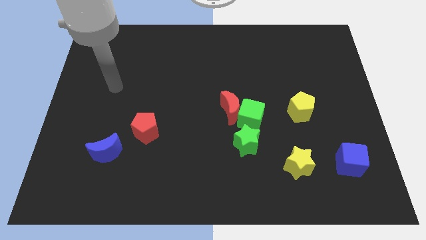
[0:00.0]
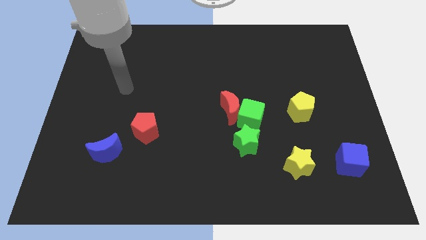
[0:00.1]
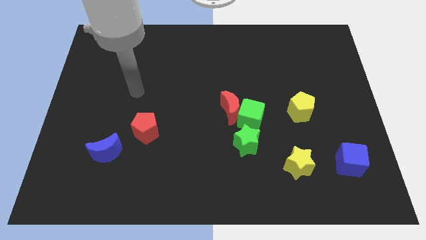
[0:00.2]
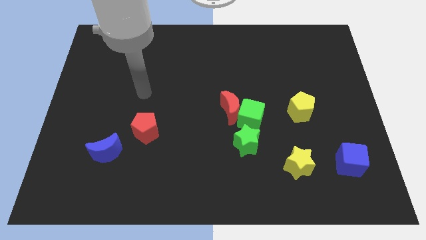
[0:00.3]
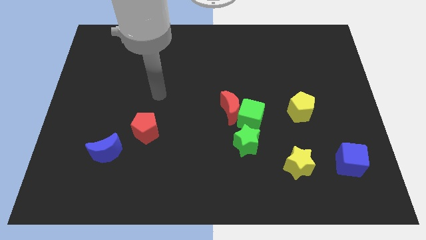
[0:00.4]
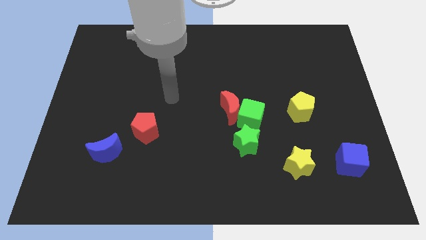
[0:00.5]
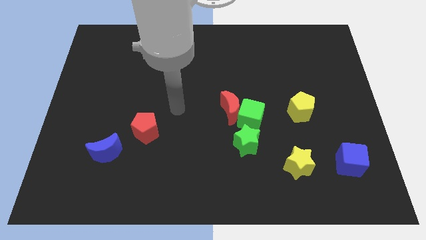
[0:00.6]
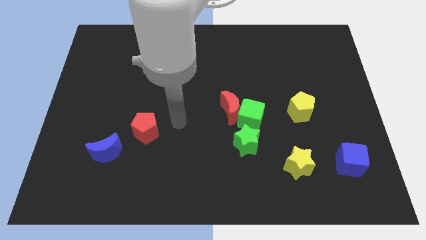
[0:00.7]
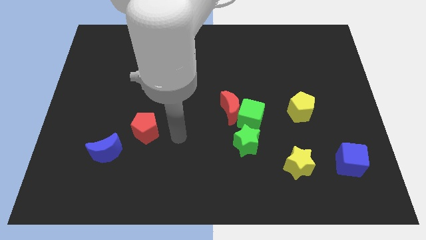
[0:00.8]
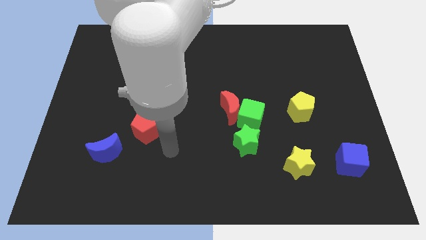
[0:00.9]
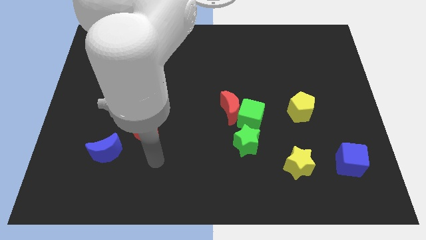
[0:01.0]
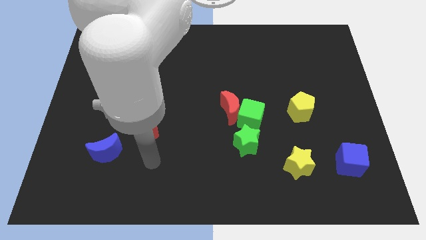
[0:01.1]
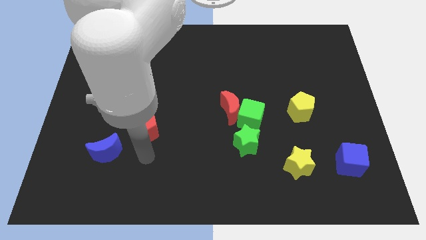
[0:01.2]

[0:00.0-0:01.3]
point your arm at the bottom of red pentagon

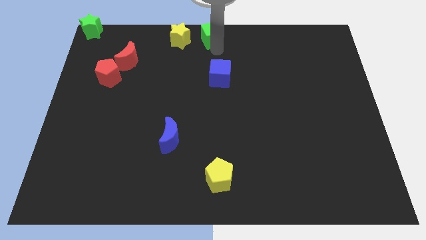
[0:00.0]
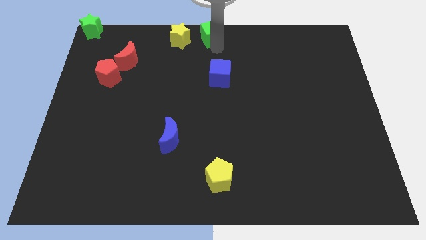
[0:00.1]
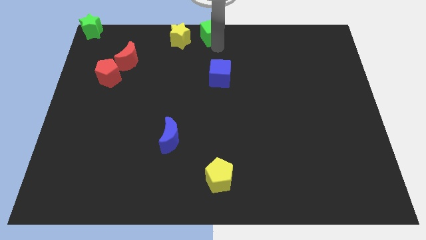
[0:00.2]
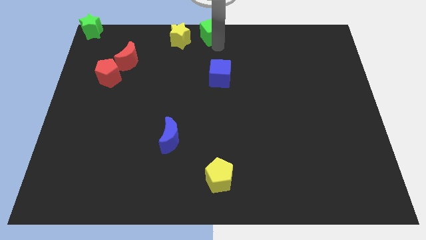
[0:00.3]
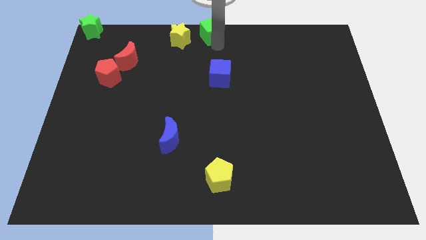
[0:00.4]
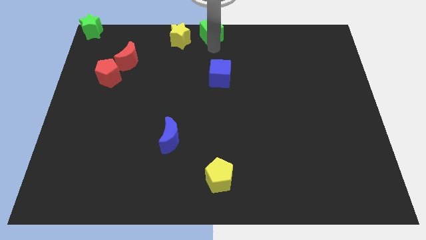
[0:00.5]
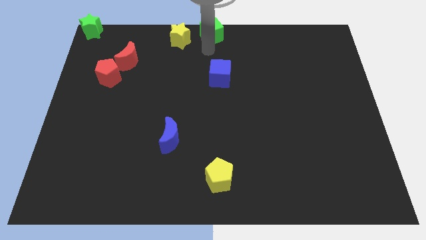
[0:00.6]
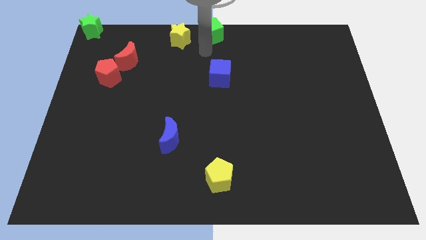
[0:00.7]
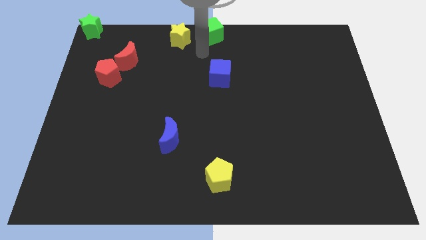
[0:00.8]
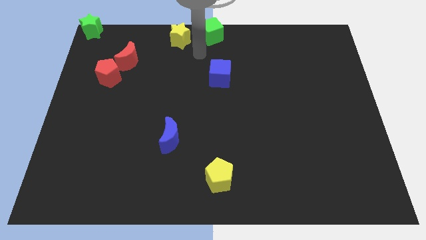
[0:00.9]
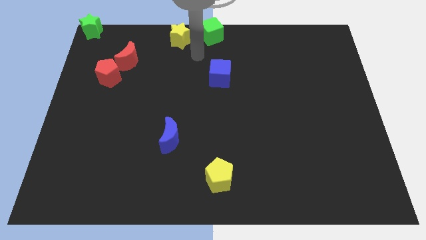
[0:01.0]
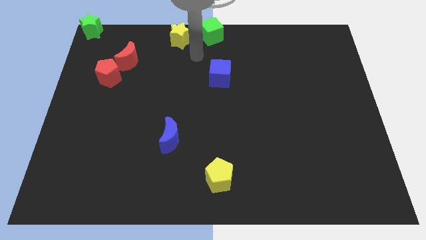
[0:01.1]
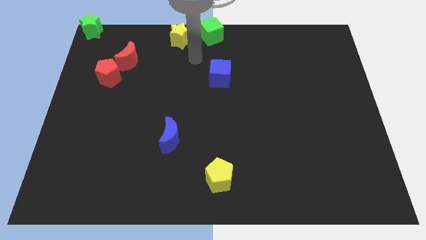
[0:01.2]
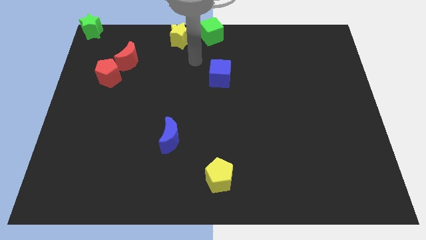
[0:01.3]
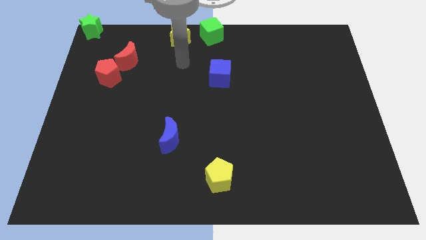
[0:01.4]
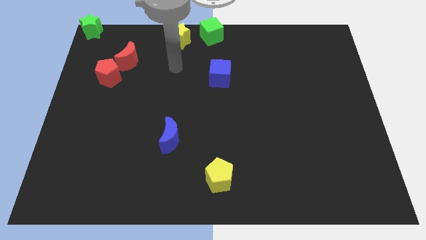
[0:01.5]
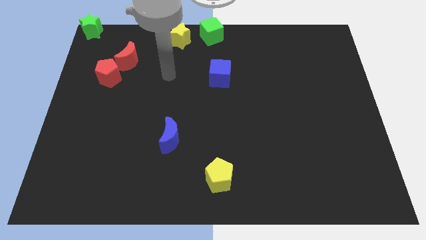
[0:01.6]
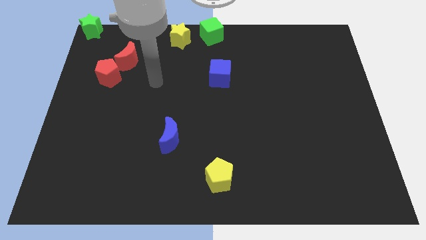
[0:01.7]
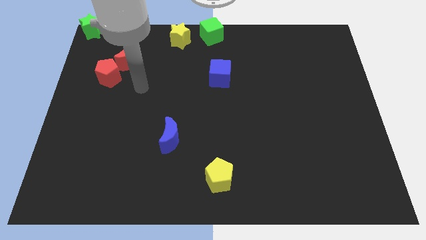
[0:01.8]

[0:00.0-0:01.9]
move your arm away from green cube

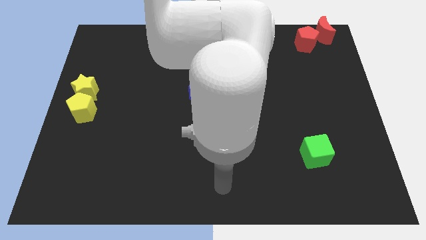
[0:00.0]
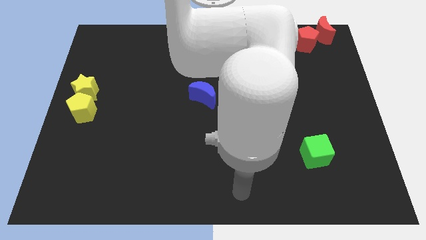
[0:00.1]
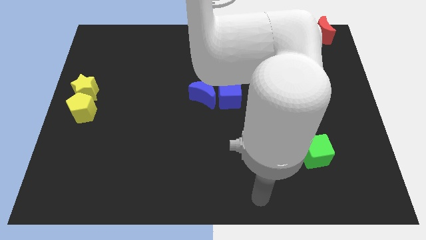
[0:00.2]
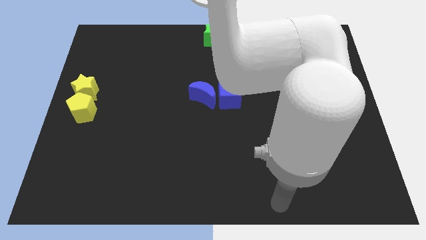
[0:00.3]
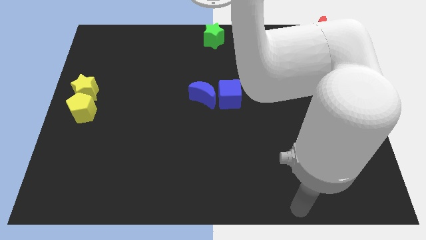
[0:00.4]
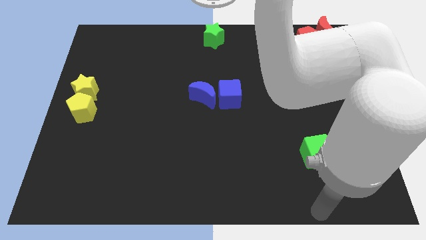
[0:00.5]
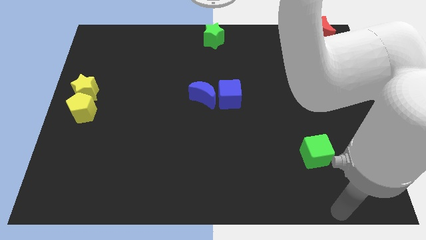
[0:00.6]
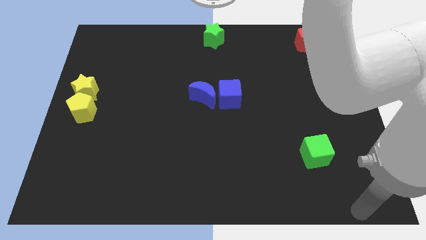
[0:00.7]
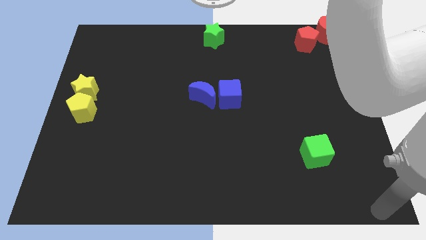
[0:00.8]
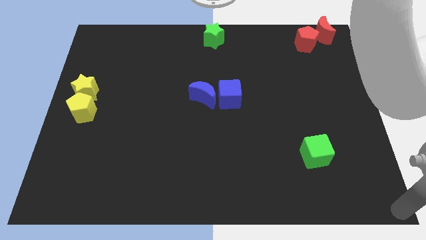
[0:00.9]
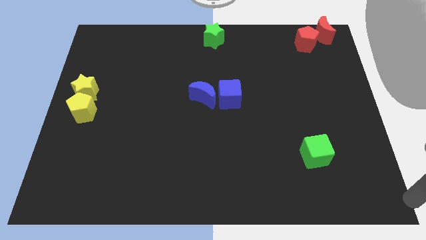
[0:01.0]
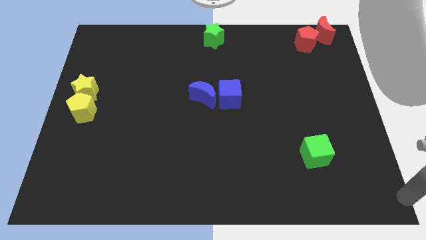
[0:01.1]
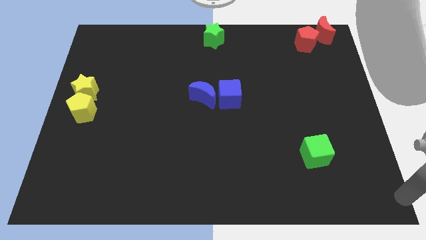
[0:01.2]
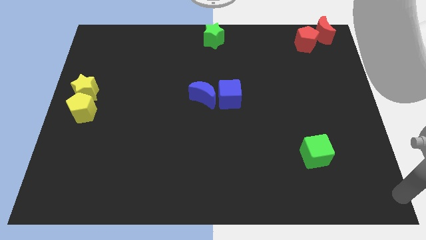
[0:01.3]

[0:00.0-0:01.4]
move your hand towards the bottom right of the board

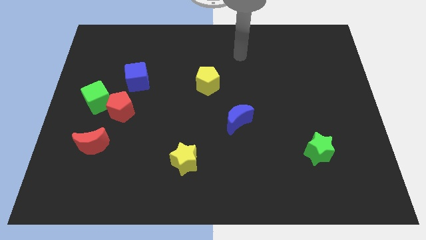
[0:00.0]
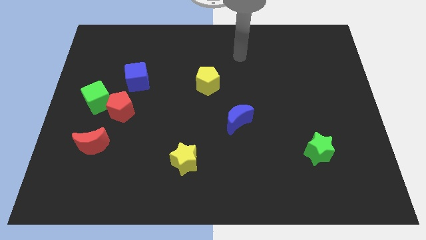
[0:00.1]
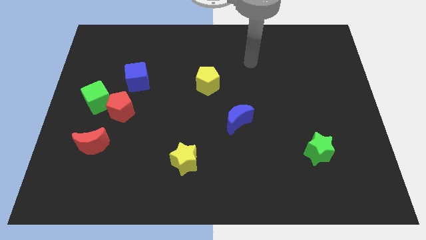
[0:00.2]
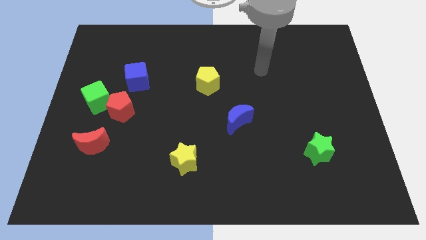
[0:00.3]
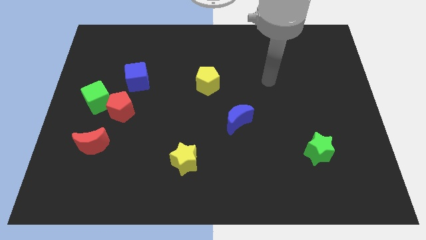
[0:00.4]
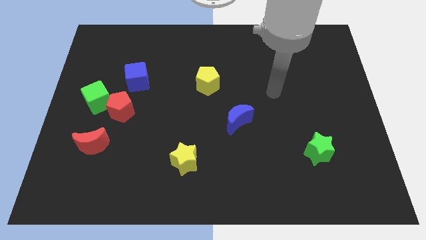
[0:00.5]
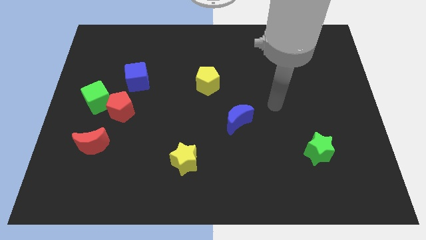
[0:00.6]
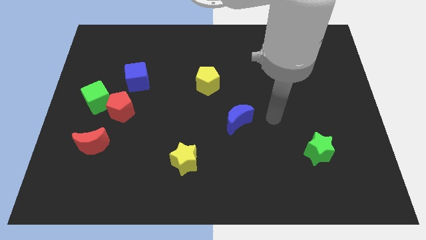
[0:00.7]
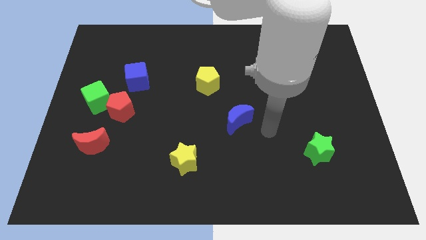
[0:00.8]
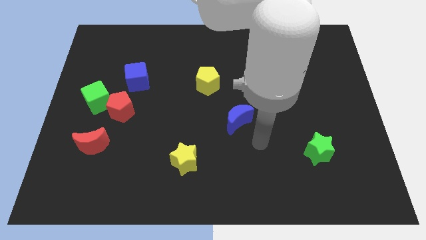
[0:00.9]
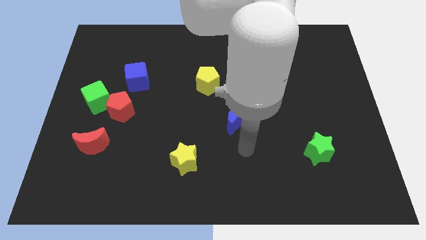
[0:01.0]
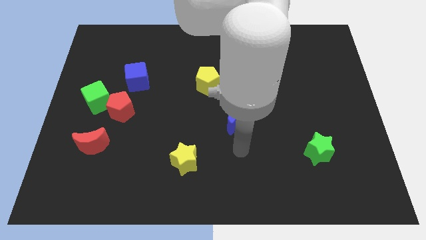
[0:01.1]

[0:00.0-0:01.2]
move your hand towards the blue crescent

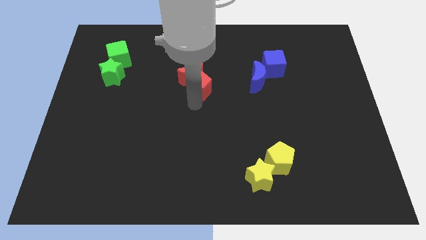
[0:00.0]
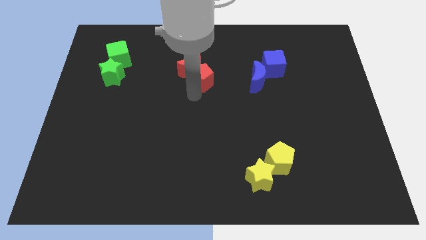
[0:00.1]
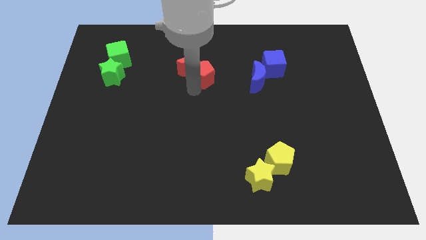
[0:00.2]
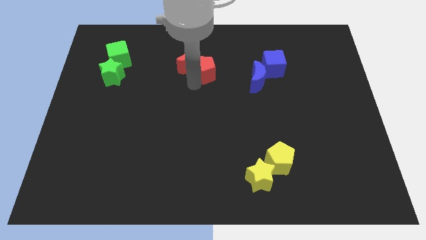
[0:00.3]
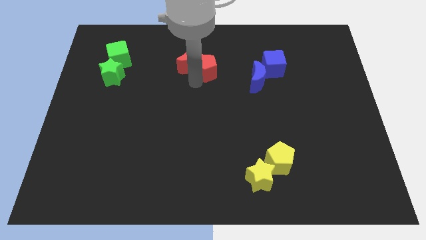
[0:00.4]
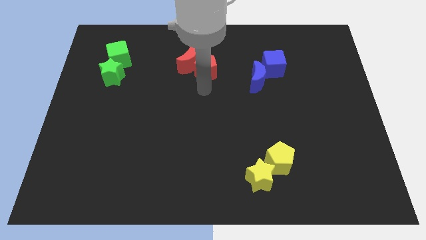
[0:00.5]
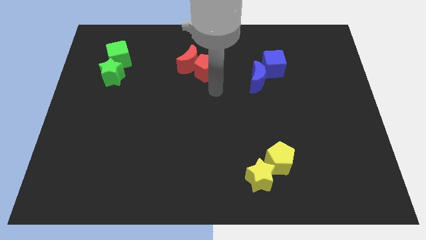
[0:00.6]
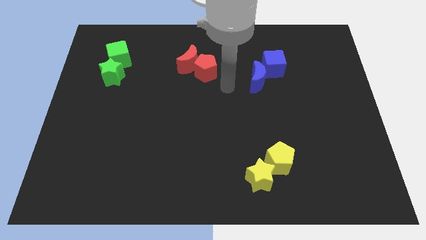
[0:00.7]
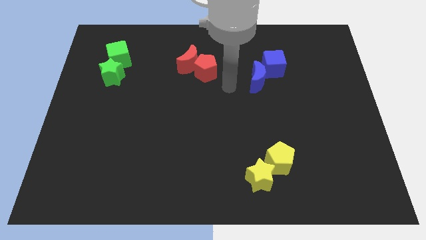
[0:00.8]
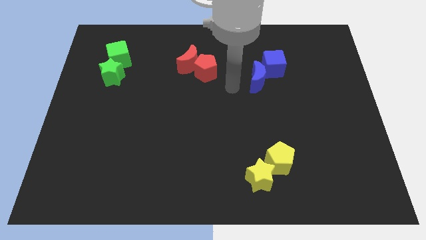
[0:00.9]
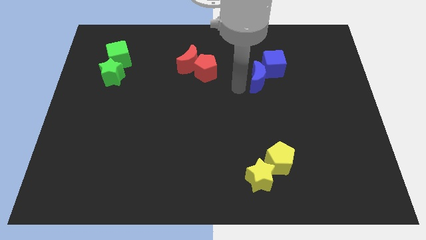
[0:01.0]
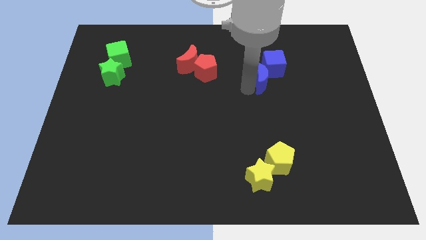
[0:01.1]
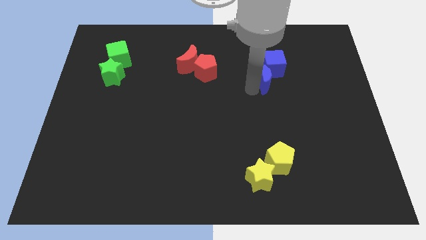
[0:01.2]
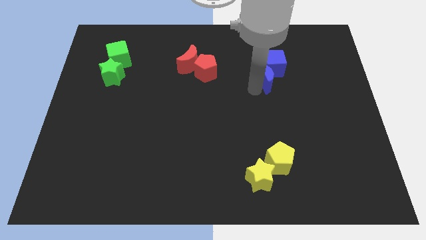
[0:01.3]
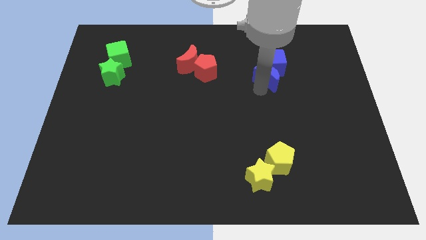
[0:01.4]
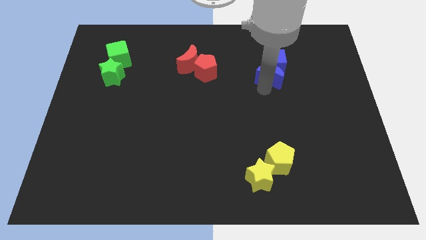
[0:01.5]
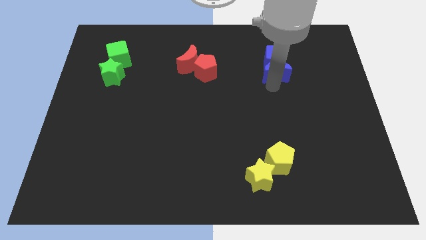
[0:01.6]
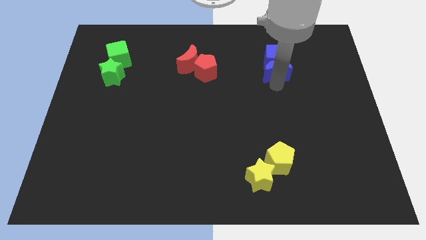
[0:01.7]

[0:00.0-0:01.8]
place the red crescent and red pentagon horizontally left to the blue crescent and blue cube

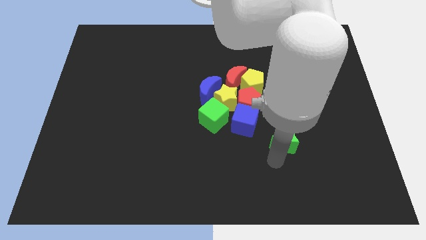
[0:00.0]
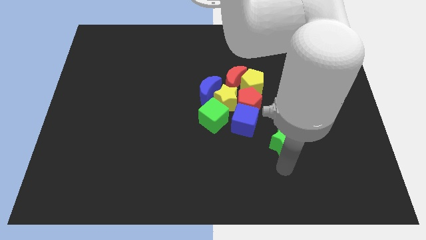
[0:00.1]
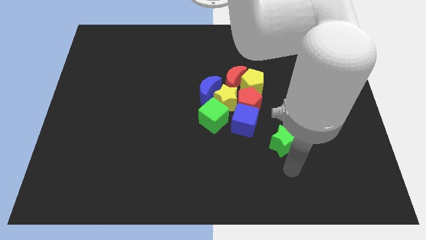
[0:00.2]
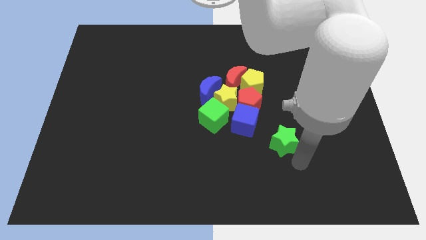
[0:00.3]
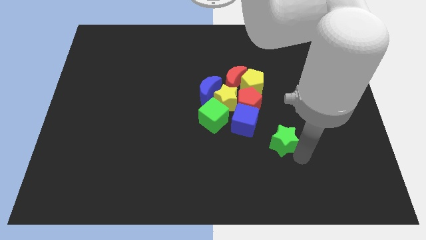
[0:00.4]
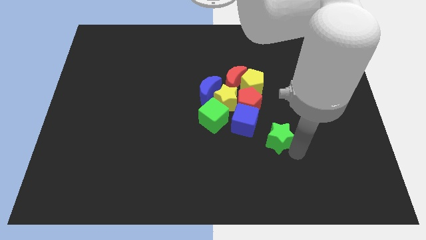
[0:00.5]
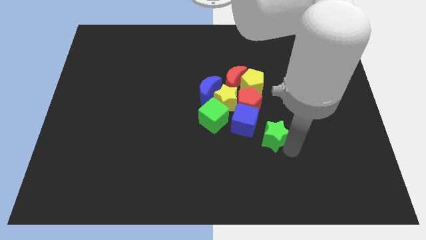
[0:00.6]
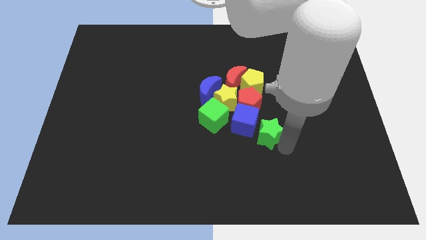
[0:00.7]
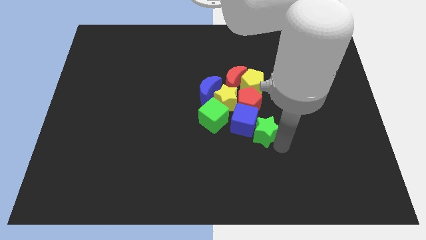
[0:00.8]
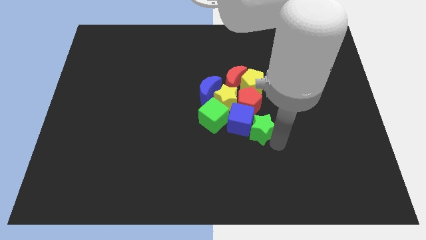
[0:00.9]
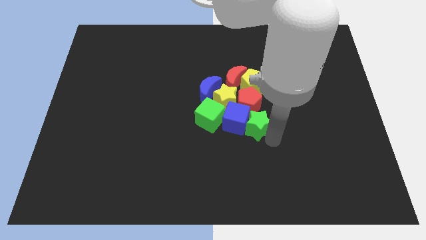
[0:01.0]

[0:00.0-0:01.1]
place the green star to the right of the blue cube

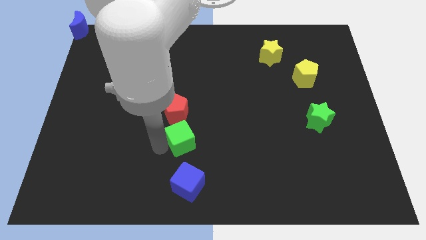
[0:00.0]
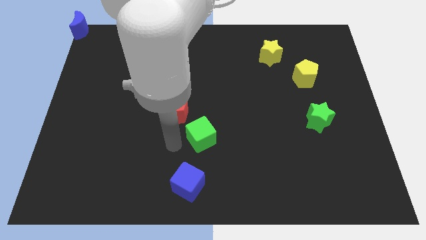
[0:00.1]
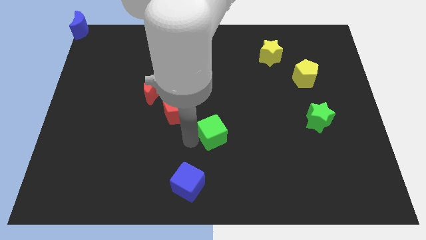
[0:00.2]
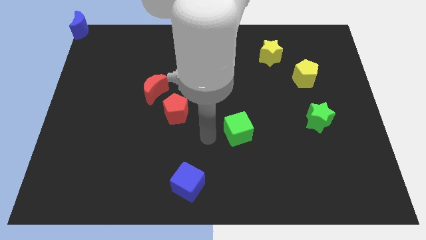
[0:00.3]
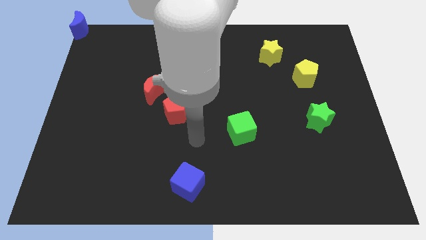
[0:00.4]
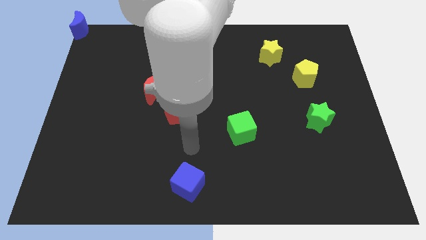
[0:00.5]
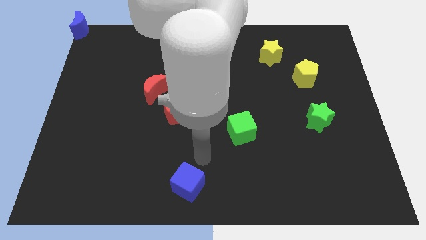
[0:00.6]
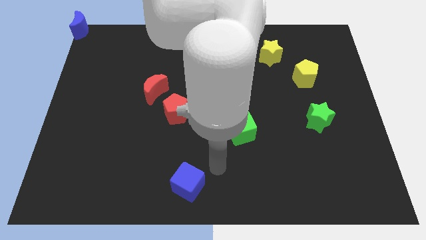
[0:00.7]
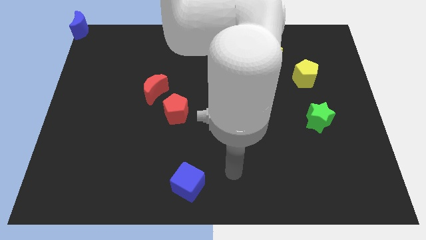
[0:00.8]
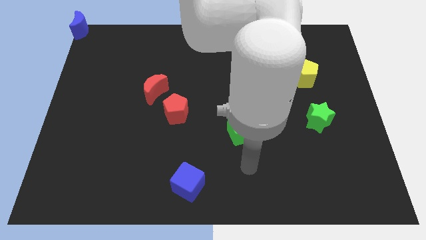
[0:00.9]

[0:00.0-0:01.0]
place the green cube diagonal to the yellow pentagon
